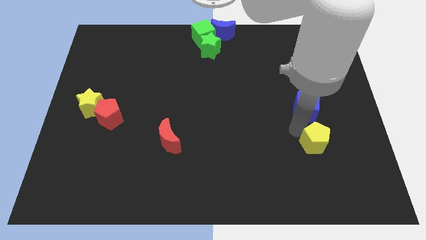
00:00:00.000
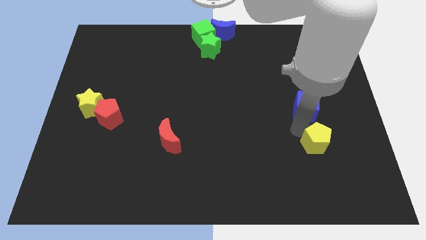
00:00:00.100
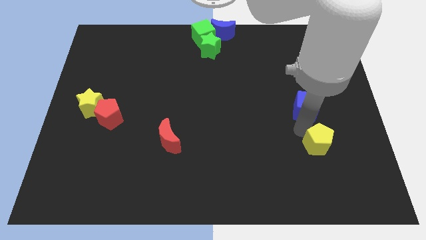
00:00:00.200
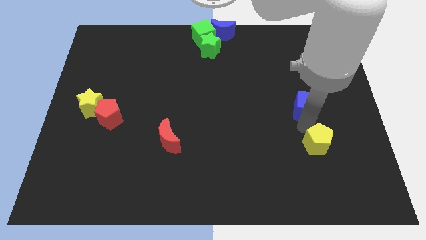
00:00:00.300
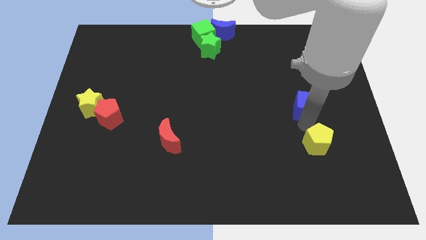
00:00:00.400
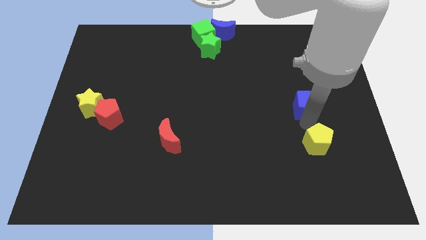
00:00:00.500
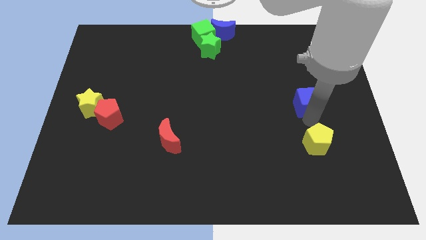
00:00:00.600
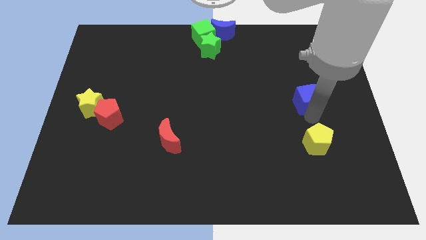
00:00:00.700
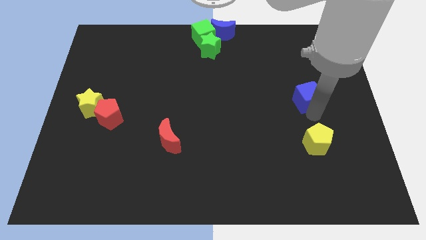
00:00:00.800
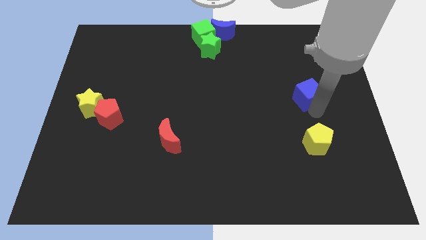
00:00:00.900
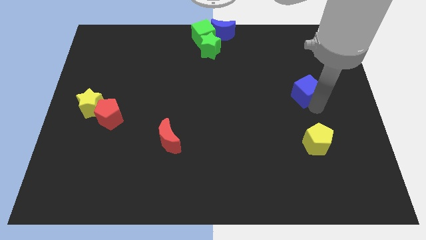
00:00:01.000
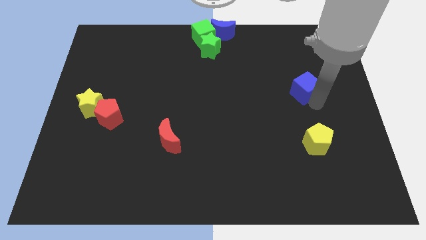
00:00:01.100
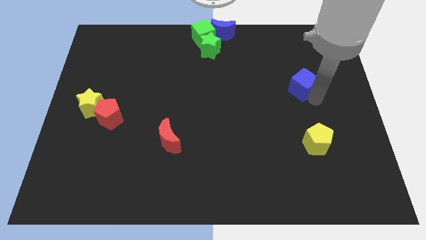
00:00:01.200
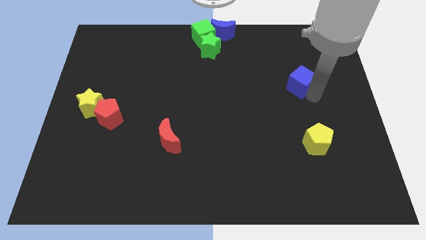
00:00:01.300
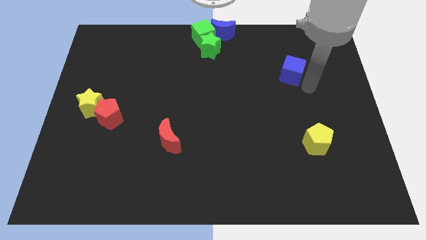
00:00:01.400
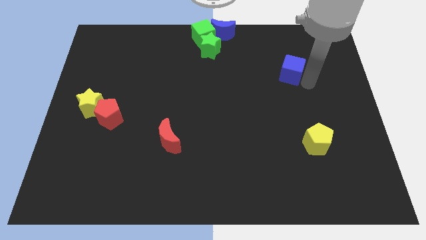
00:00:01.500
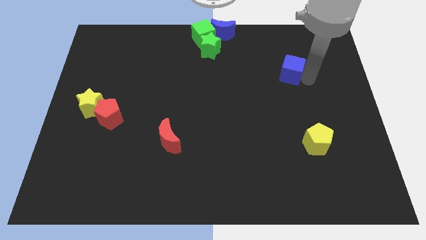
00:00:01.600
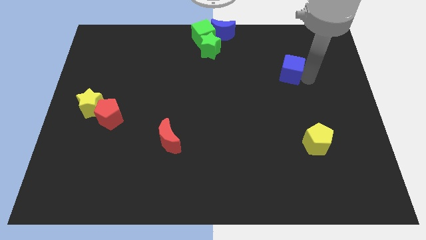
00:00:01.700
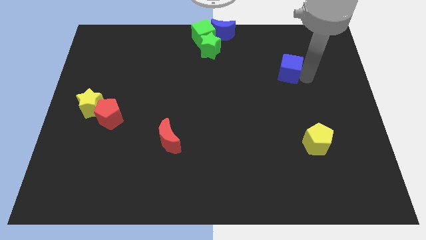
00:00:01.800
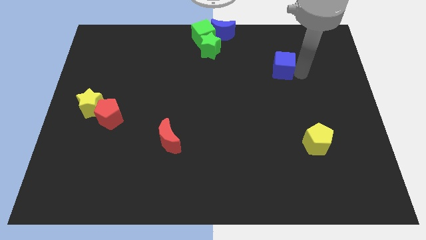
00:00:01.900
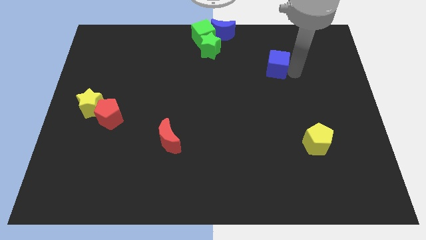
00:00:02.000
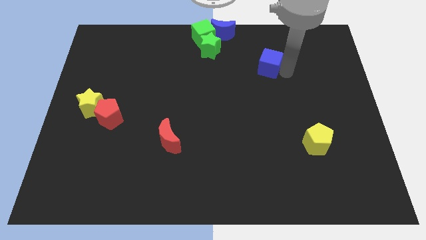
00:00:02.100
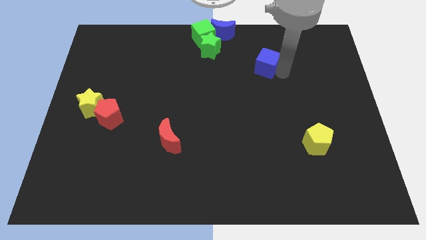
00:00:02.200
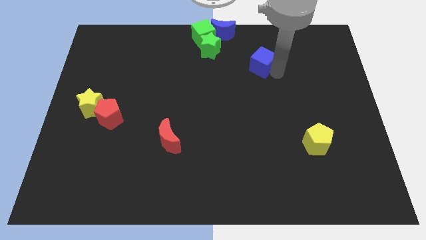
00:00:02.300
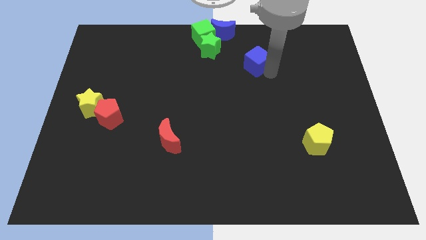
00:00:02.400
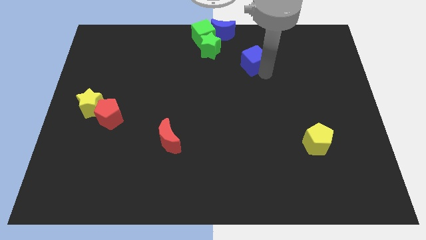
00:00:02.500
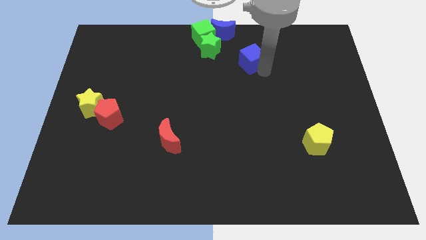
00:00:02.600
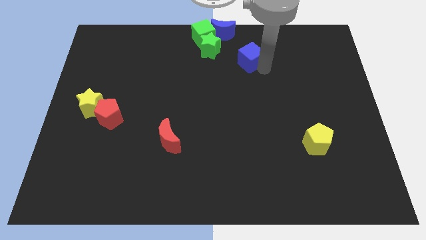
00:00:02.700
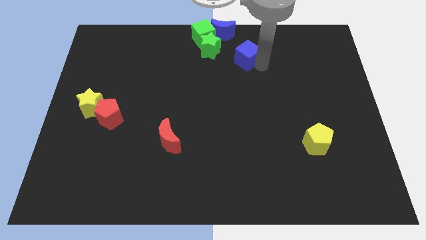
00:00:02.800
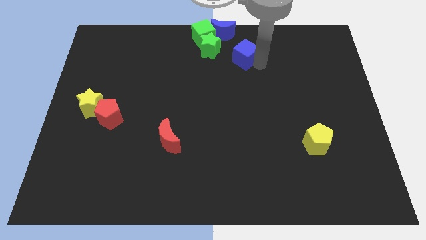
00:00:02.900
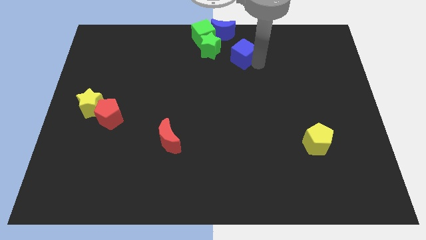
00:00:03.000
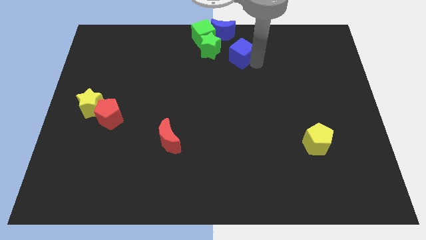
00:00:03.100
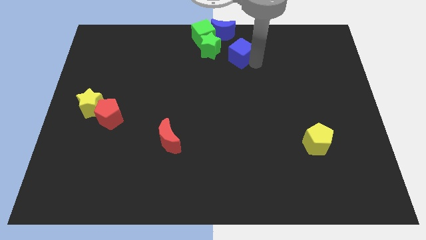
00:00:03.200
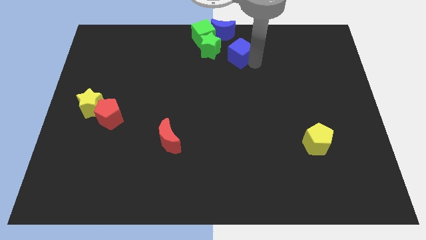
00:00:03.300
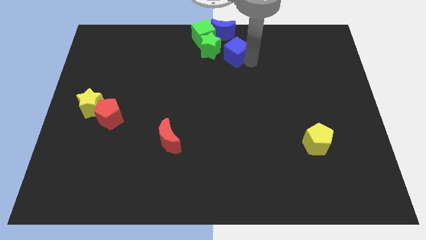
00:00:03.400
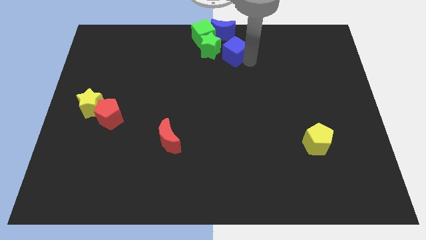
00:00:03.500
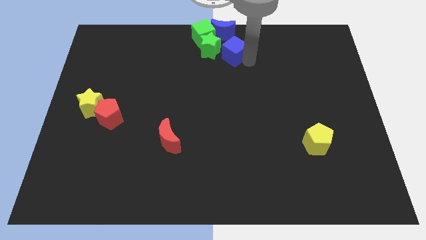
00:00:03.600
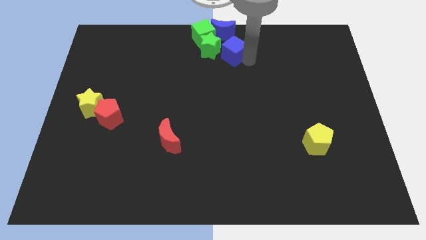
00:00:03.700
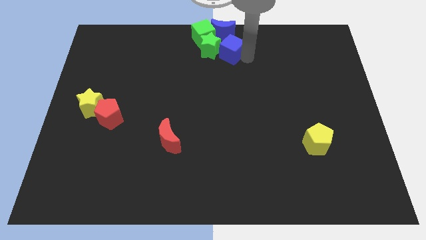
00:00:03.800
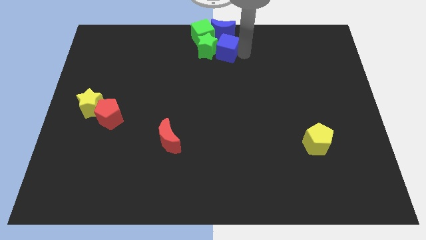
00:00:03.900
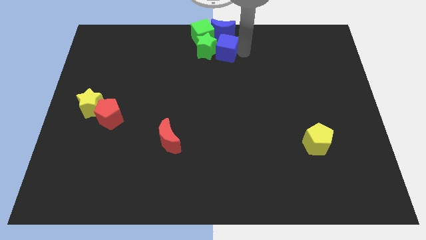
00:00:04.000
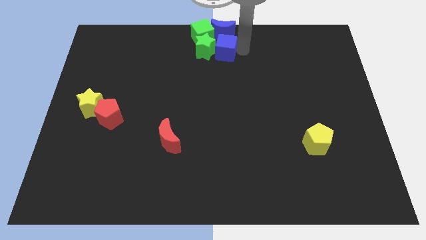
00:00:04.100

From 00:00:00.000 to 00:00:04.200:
move the blue cube to the right of the green star

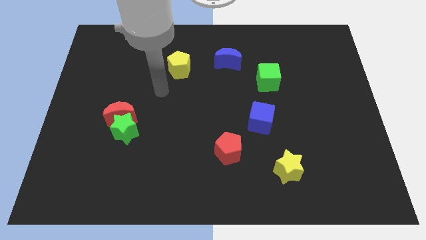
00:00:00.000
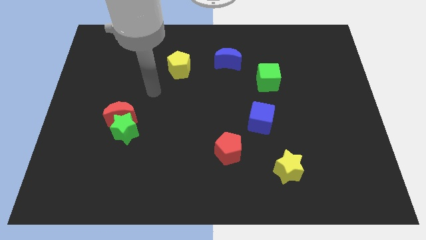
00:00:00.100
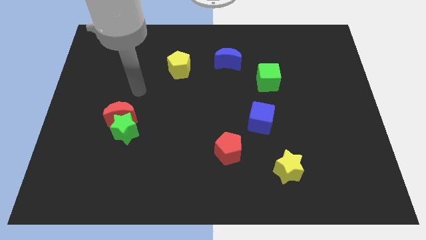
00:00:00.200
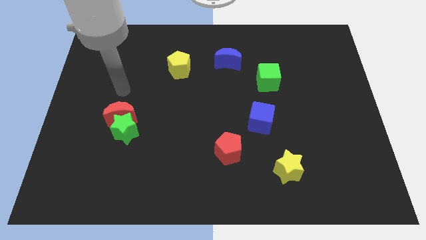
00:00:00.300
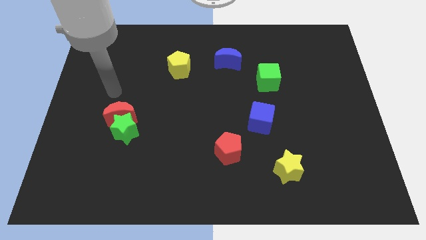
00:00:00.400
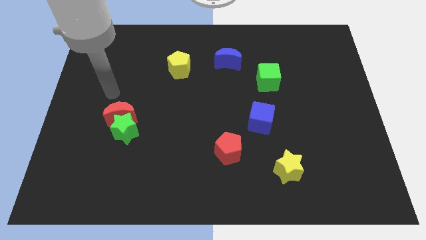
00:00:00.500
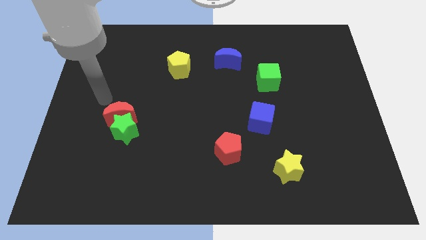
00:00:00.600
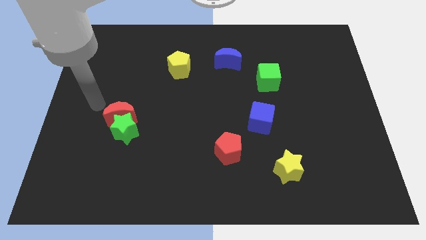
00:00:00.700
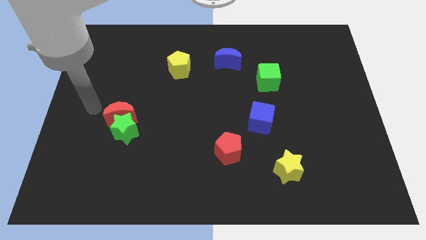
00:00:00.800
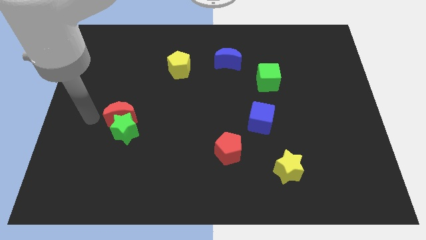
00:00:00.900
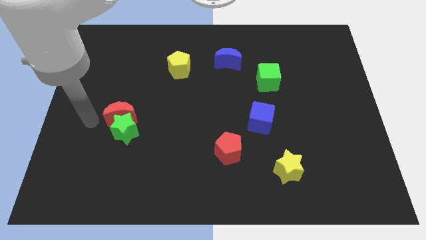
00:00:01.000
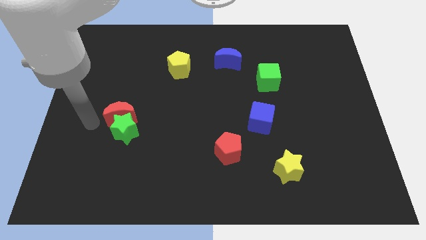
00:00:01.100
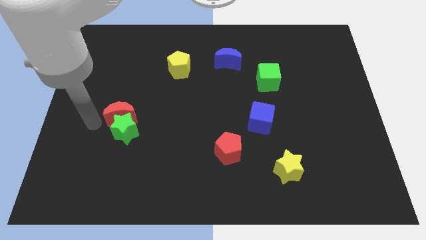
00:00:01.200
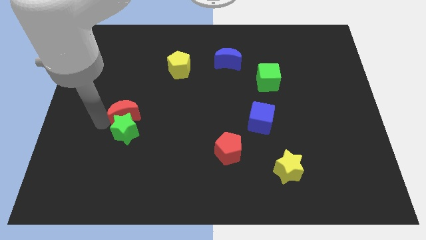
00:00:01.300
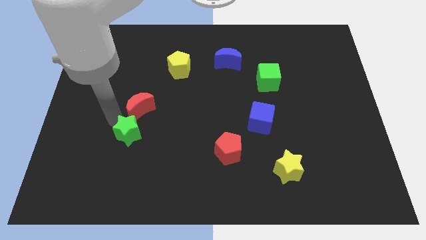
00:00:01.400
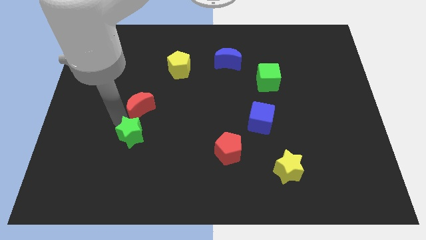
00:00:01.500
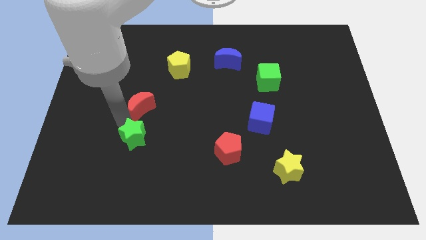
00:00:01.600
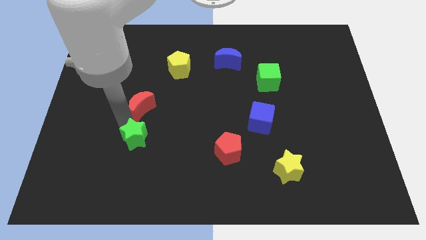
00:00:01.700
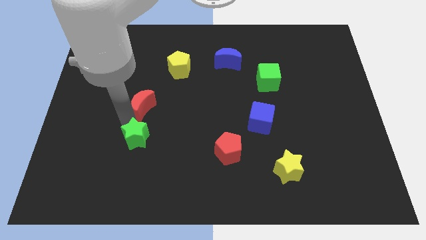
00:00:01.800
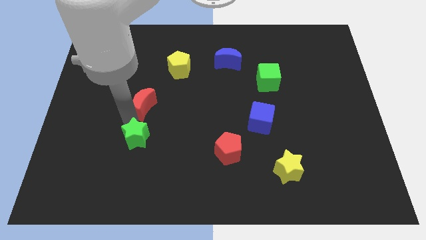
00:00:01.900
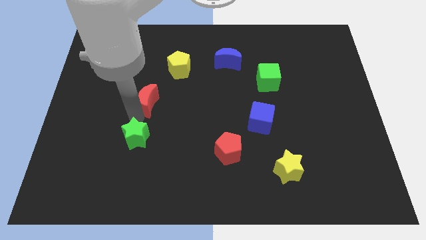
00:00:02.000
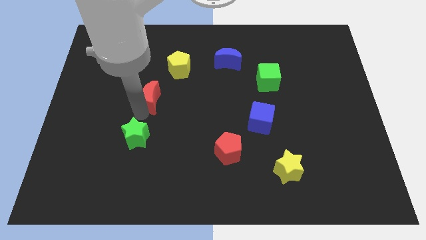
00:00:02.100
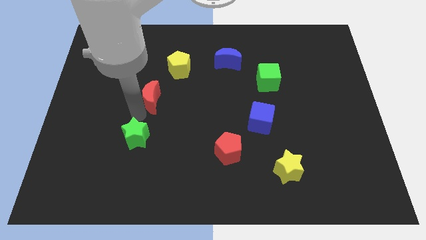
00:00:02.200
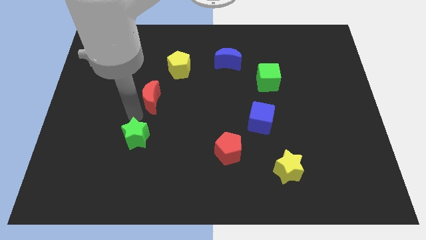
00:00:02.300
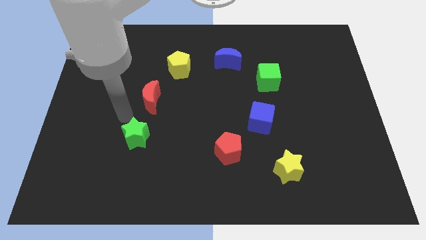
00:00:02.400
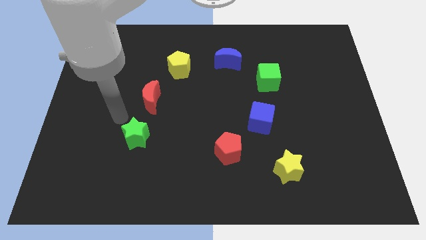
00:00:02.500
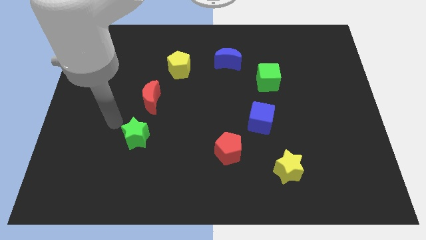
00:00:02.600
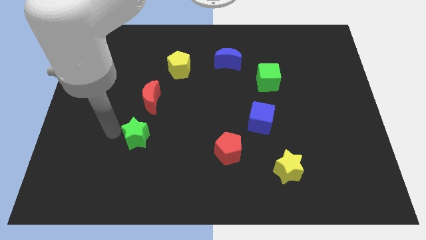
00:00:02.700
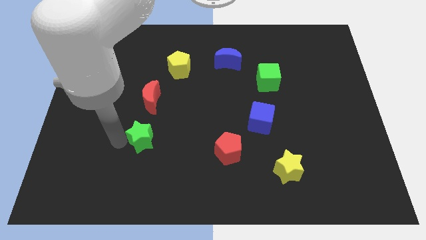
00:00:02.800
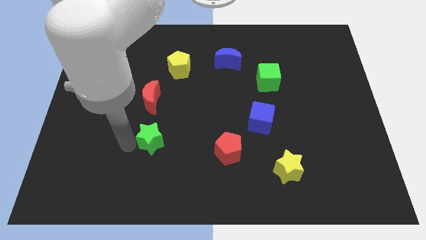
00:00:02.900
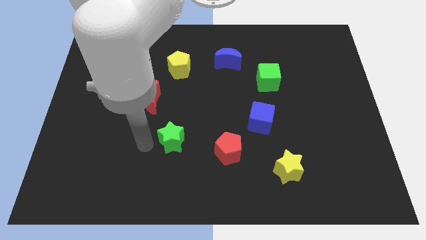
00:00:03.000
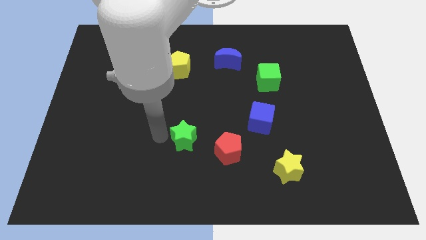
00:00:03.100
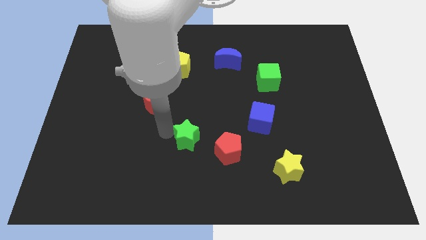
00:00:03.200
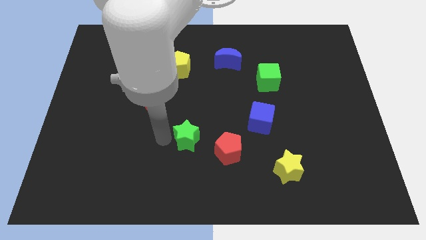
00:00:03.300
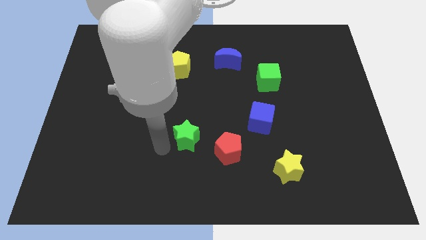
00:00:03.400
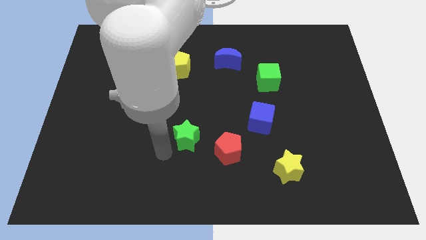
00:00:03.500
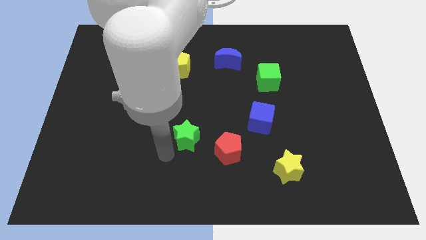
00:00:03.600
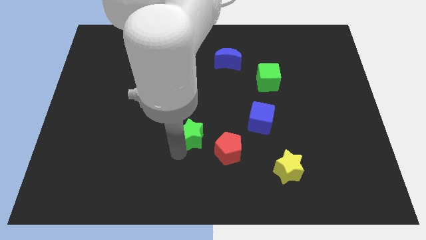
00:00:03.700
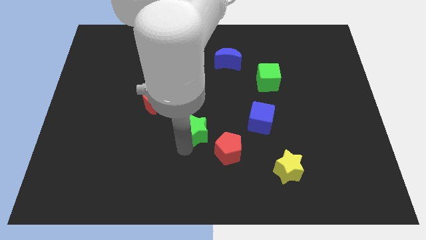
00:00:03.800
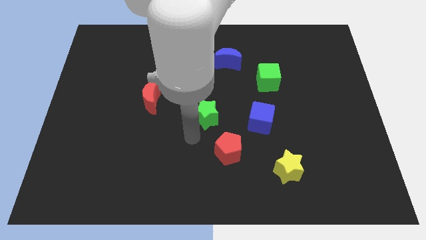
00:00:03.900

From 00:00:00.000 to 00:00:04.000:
separate the green star from the red moon

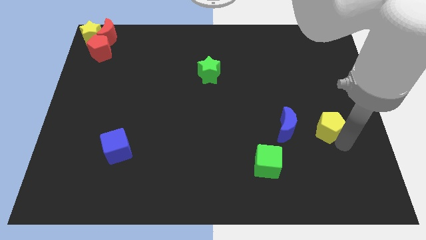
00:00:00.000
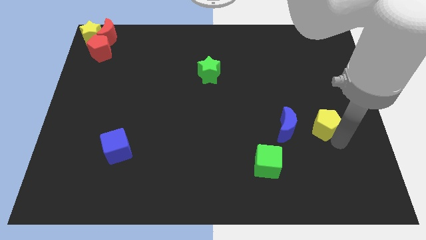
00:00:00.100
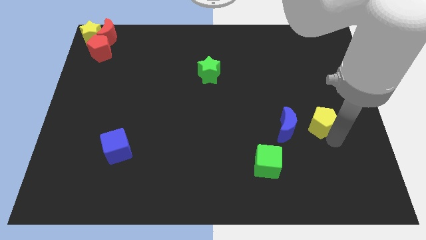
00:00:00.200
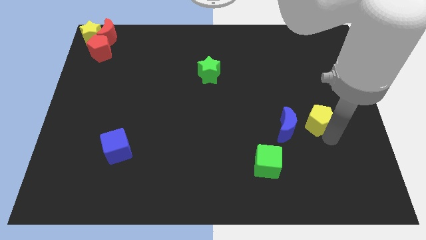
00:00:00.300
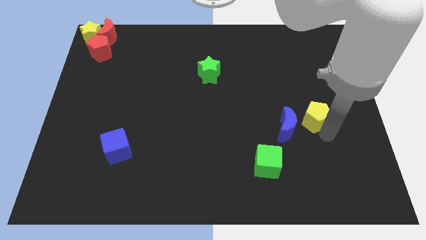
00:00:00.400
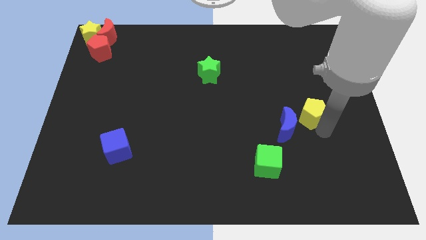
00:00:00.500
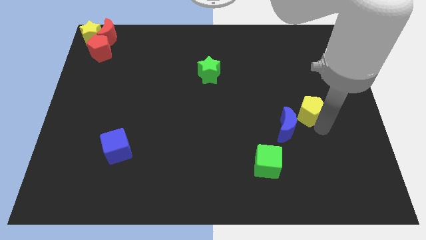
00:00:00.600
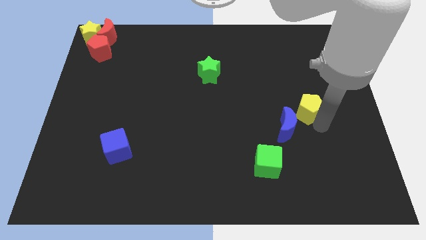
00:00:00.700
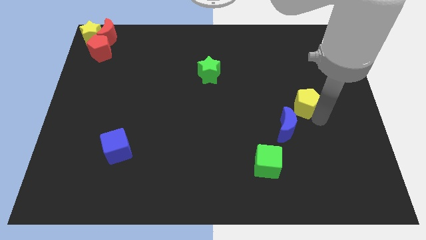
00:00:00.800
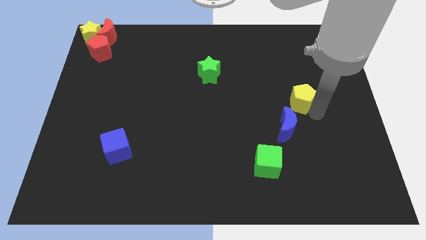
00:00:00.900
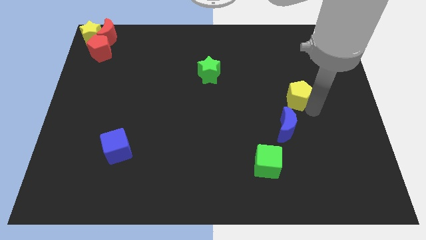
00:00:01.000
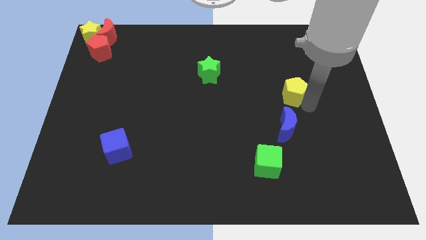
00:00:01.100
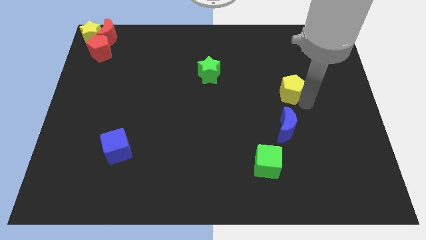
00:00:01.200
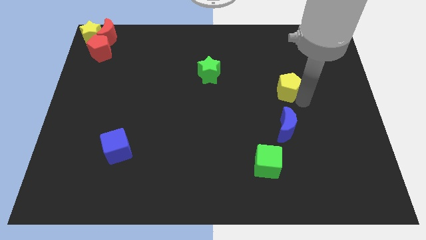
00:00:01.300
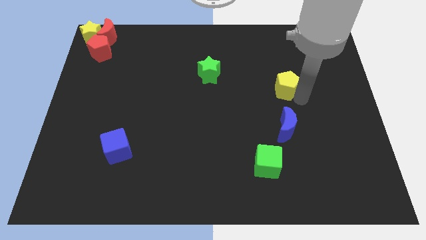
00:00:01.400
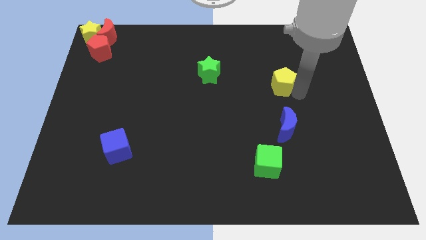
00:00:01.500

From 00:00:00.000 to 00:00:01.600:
place yellow pentagon to the top of blue crescent
